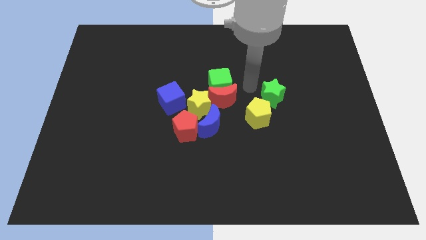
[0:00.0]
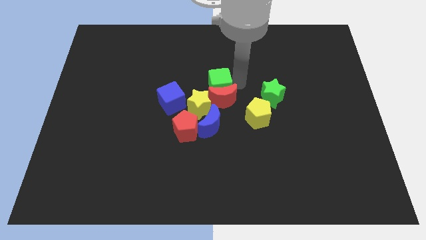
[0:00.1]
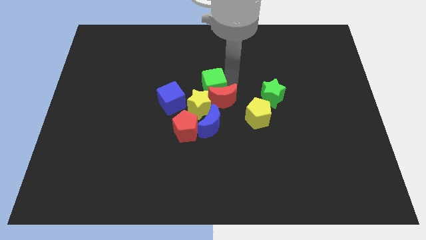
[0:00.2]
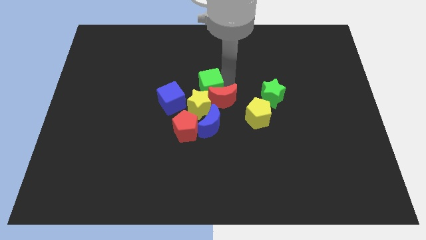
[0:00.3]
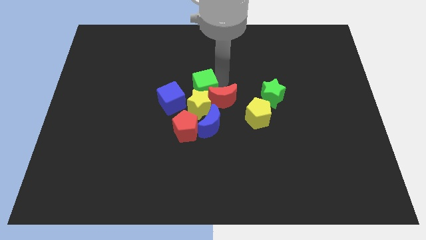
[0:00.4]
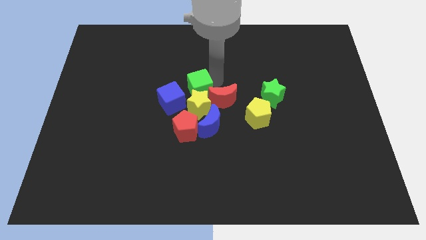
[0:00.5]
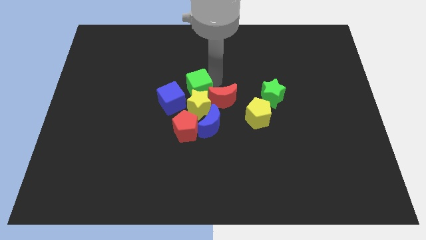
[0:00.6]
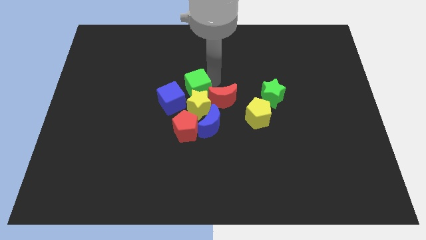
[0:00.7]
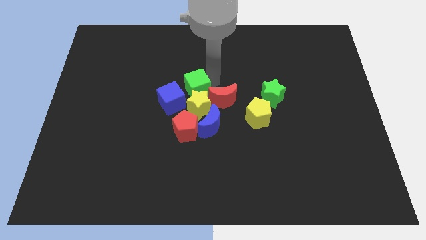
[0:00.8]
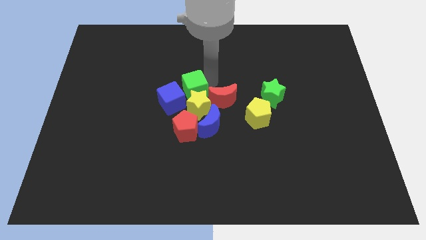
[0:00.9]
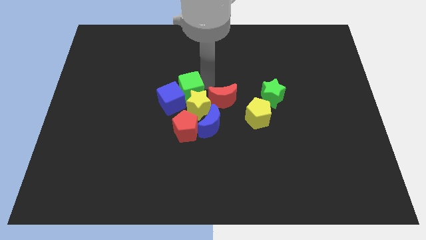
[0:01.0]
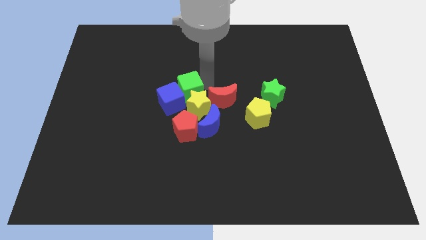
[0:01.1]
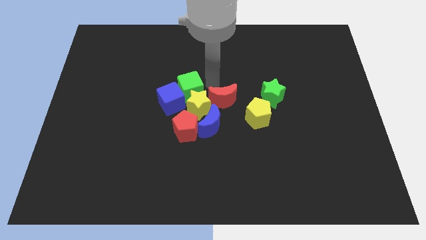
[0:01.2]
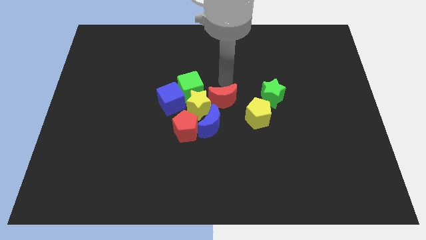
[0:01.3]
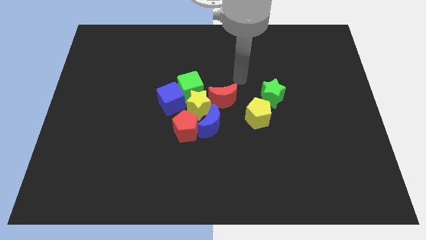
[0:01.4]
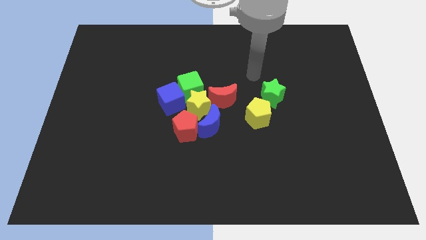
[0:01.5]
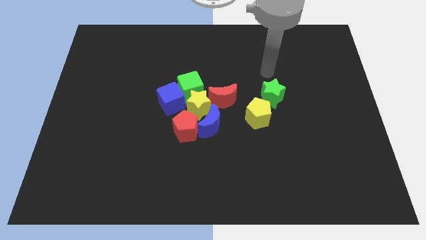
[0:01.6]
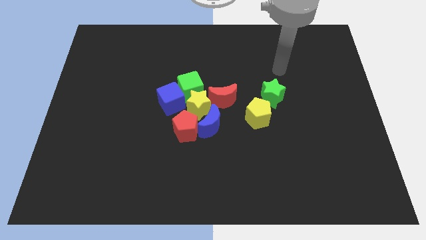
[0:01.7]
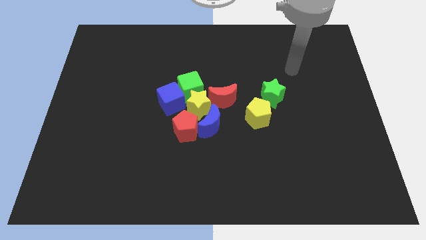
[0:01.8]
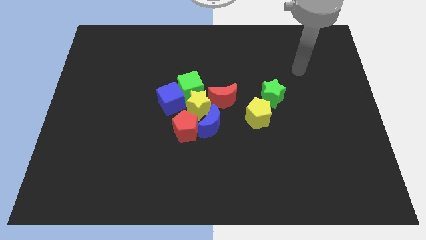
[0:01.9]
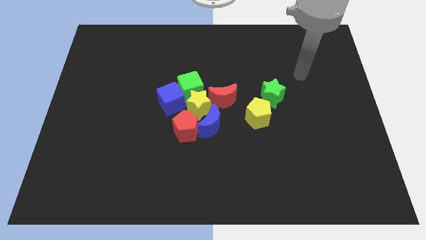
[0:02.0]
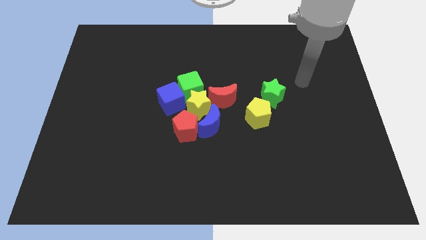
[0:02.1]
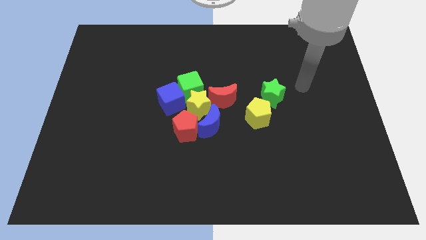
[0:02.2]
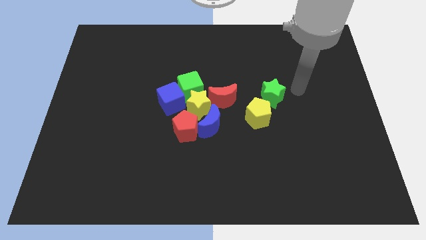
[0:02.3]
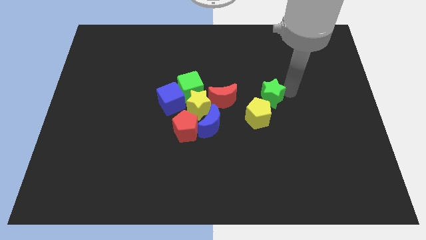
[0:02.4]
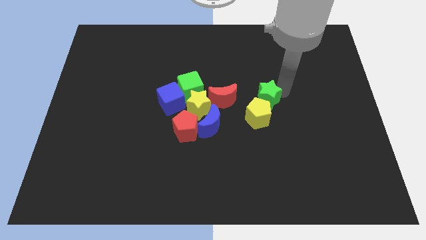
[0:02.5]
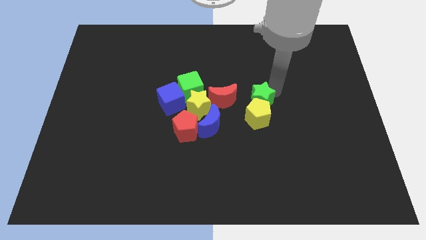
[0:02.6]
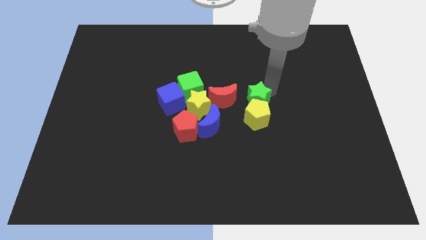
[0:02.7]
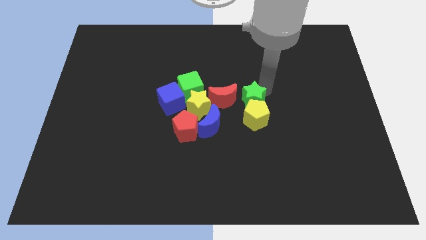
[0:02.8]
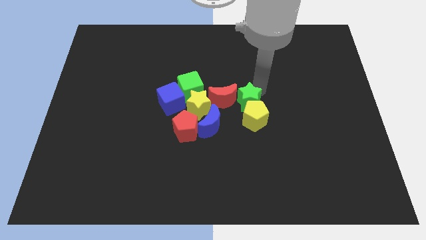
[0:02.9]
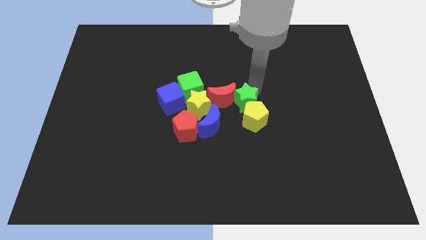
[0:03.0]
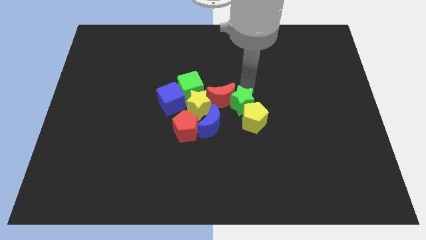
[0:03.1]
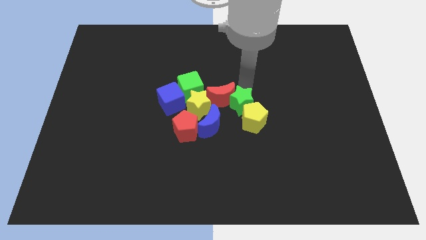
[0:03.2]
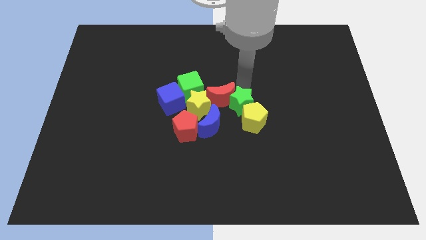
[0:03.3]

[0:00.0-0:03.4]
push the green cube into blue cube

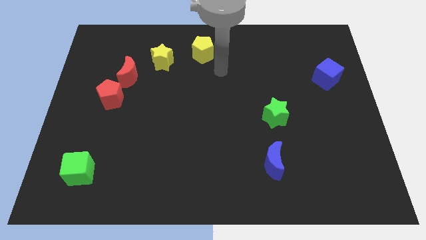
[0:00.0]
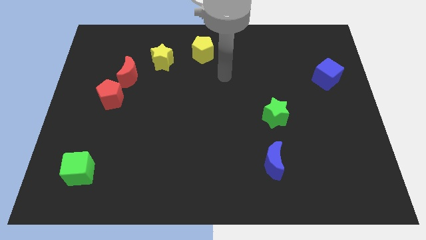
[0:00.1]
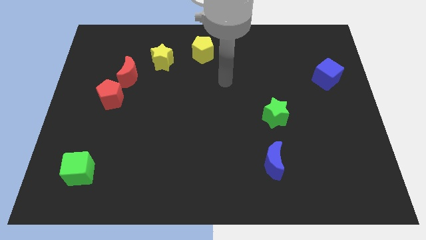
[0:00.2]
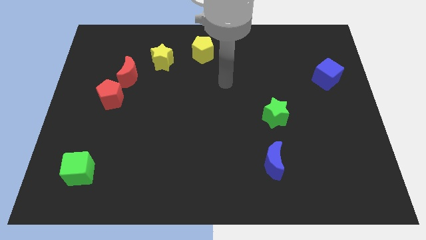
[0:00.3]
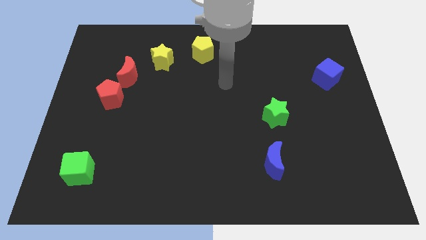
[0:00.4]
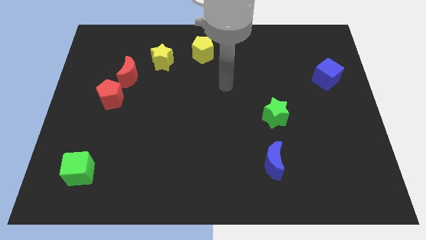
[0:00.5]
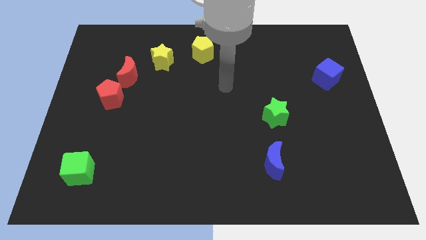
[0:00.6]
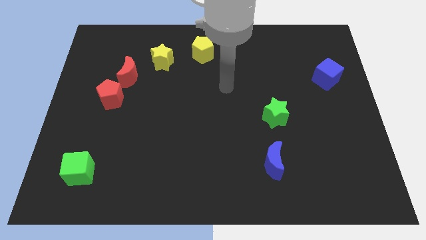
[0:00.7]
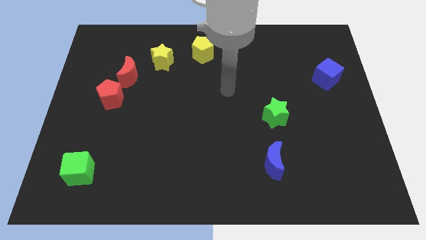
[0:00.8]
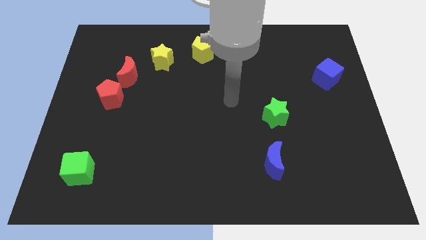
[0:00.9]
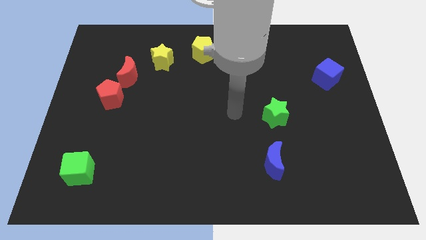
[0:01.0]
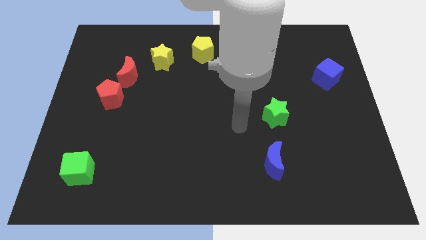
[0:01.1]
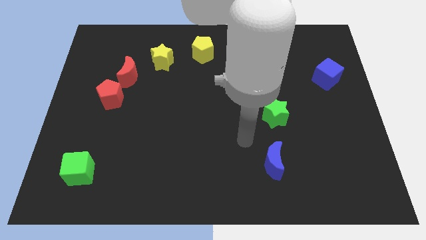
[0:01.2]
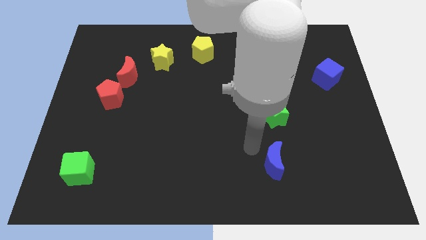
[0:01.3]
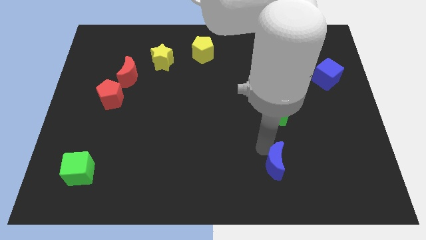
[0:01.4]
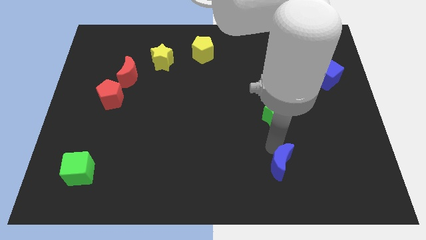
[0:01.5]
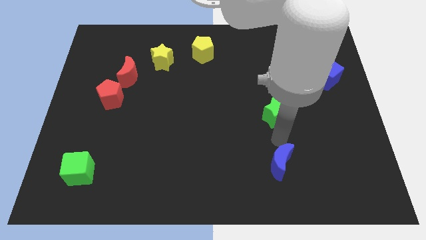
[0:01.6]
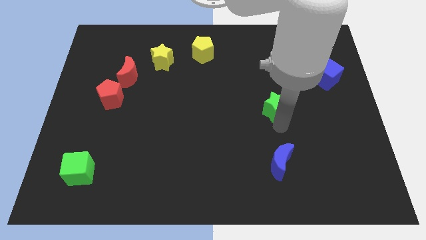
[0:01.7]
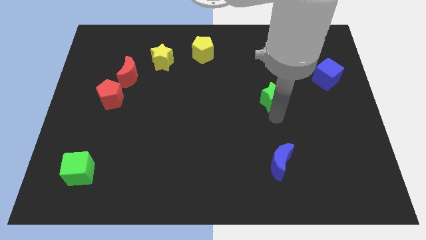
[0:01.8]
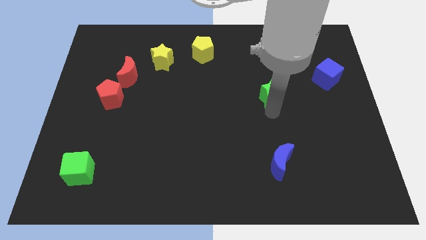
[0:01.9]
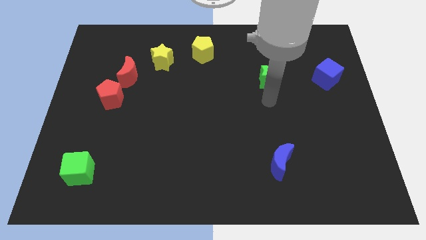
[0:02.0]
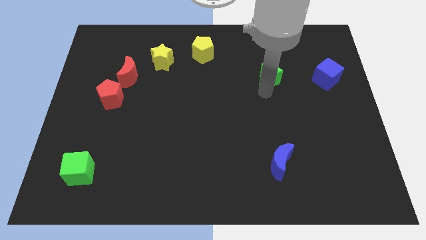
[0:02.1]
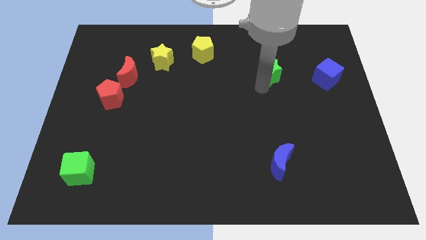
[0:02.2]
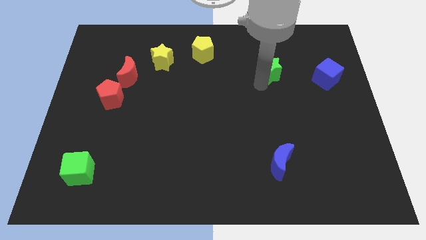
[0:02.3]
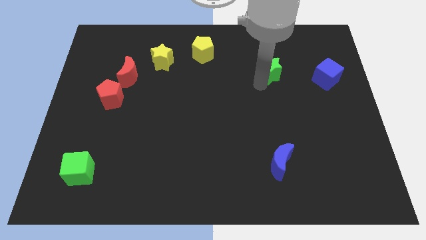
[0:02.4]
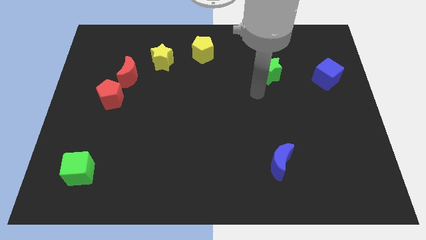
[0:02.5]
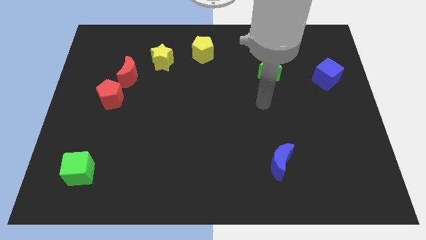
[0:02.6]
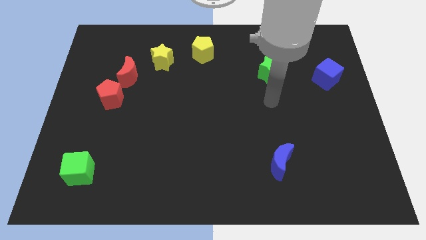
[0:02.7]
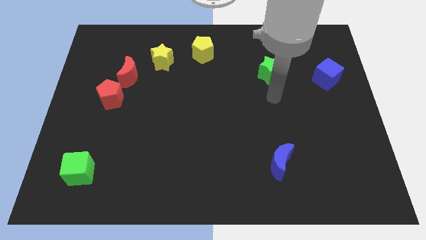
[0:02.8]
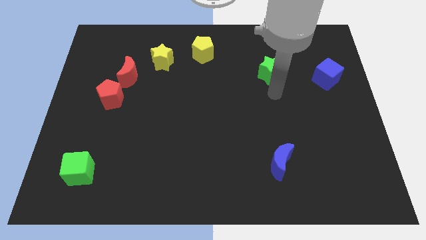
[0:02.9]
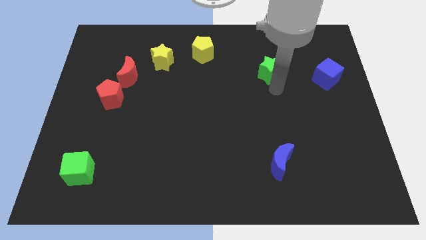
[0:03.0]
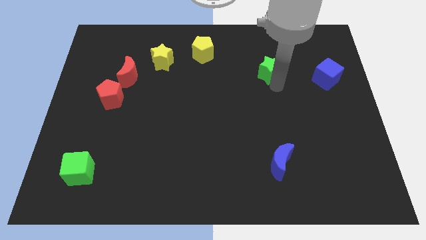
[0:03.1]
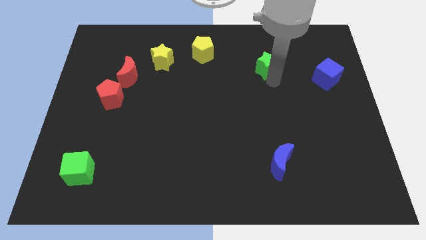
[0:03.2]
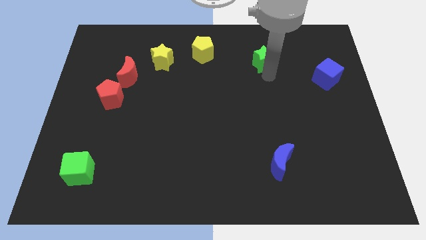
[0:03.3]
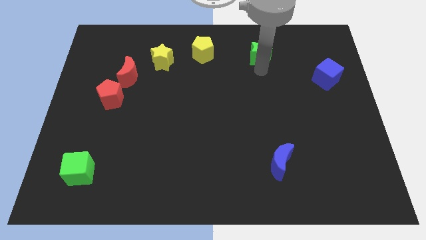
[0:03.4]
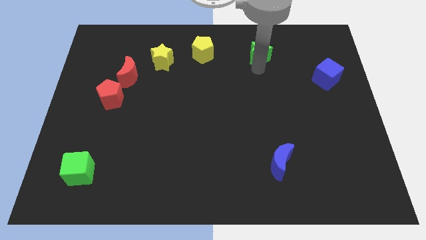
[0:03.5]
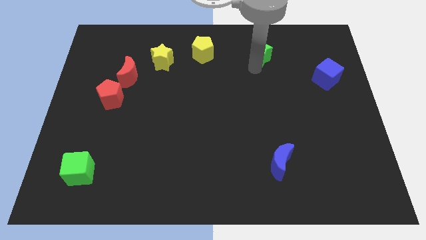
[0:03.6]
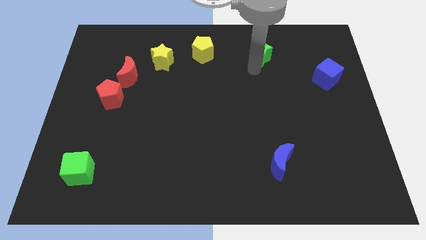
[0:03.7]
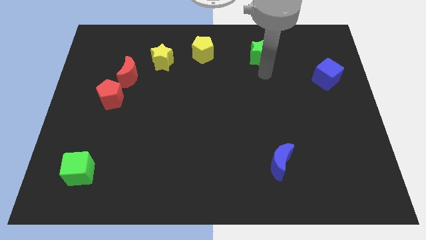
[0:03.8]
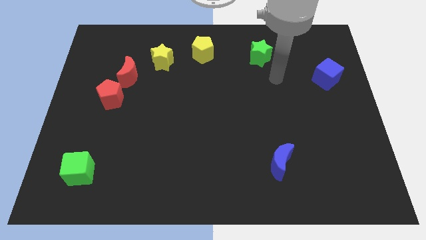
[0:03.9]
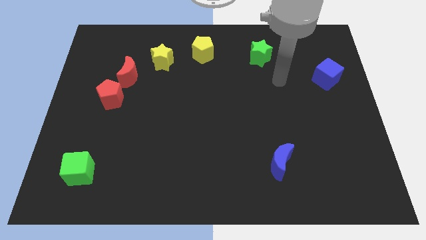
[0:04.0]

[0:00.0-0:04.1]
move green star up to the right of yellow pentagon

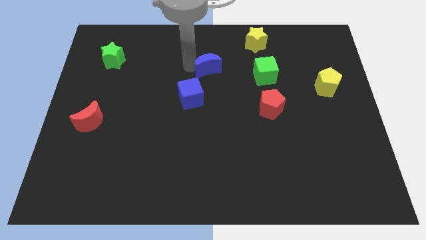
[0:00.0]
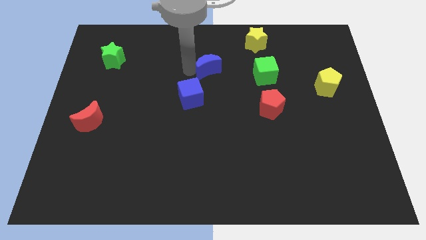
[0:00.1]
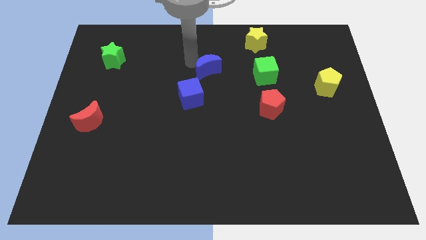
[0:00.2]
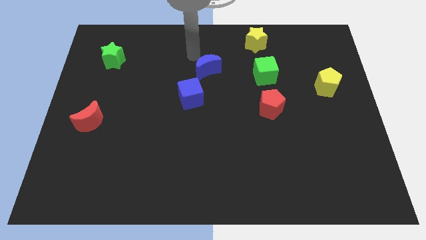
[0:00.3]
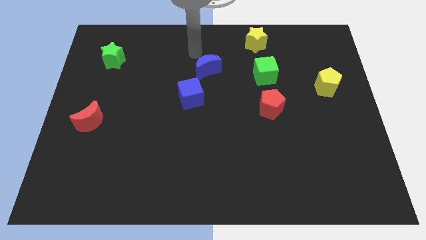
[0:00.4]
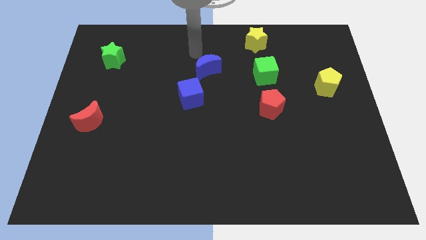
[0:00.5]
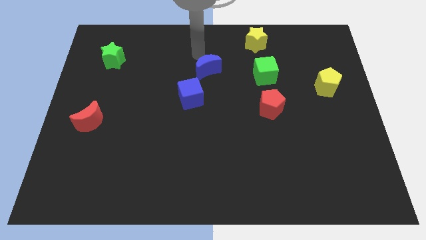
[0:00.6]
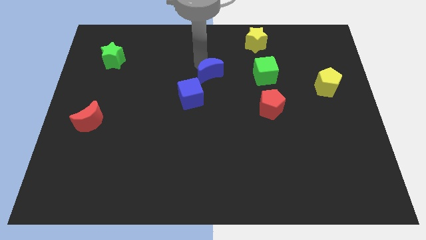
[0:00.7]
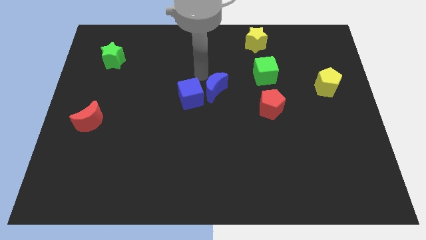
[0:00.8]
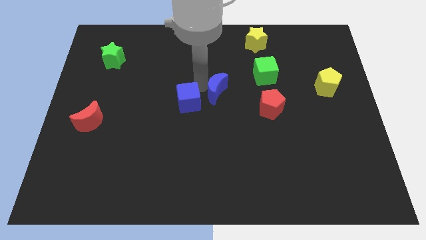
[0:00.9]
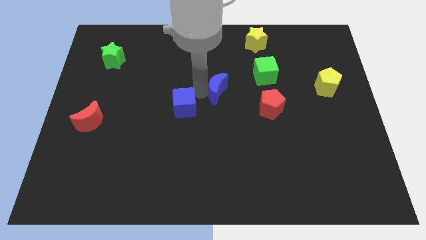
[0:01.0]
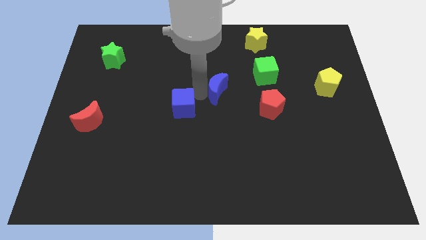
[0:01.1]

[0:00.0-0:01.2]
move blue cube and blue moon slightly down

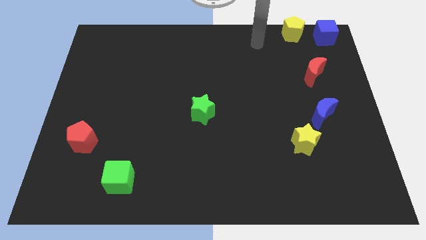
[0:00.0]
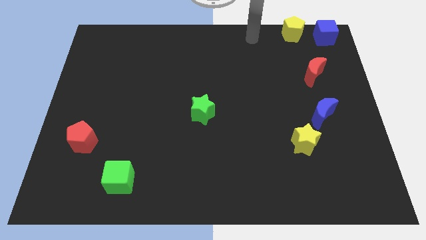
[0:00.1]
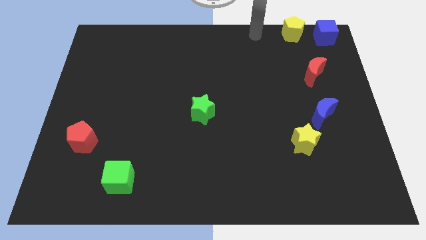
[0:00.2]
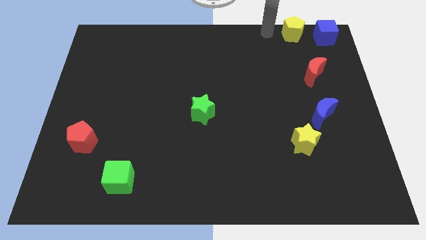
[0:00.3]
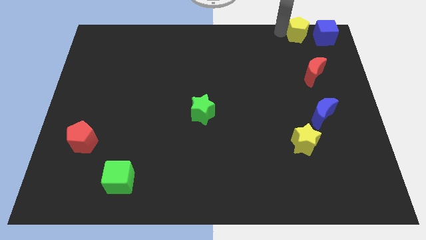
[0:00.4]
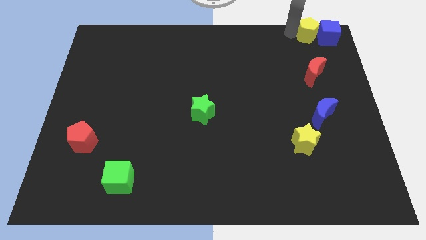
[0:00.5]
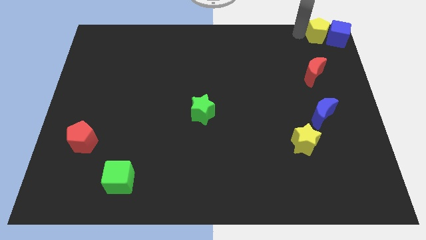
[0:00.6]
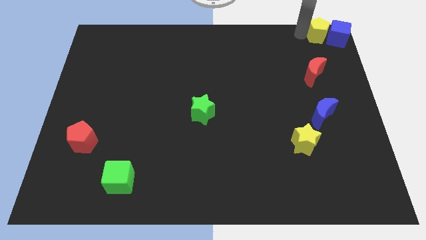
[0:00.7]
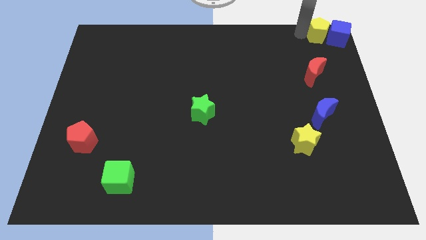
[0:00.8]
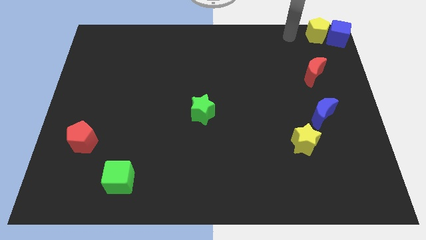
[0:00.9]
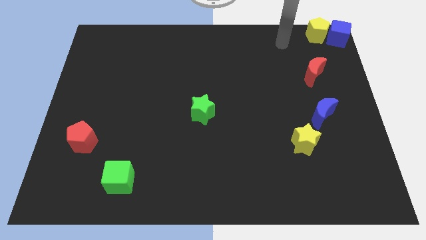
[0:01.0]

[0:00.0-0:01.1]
push yellow pentagon in to blue cube
